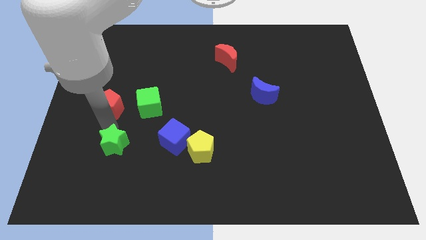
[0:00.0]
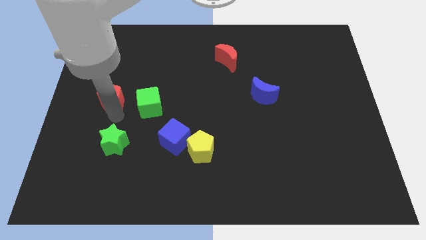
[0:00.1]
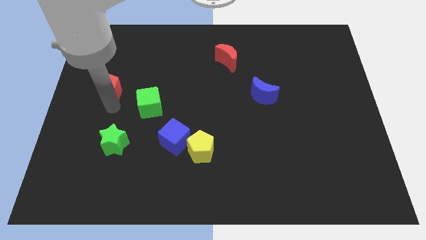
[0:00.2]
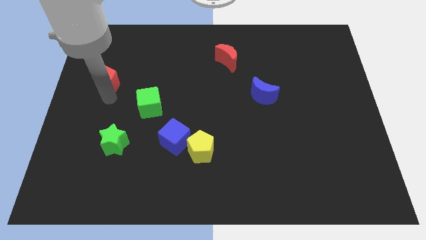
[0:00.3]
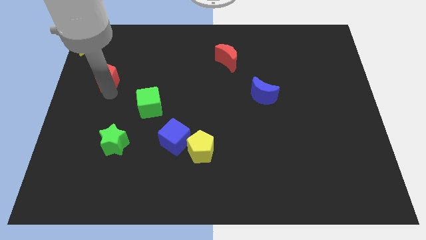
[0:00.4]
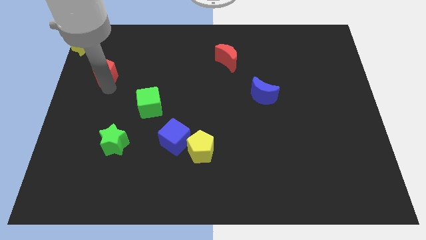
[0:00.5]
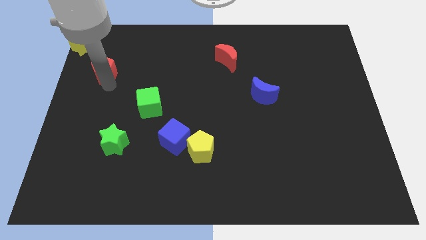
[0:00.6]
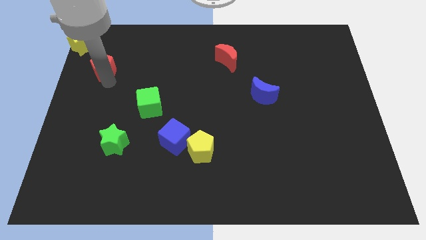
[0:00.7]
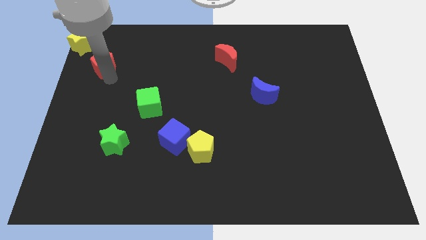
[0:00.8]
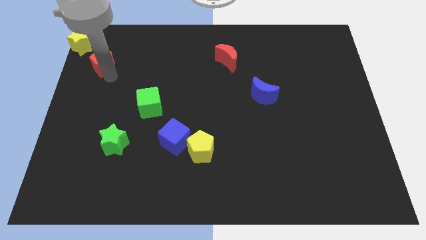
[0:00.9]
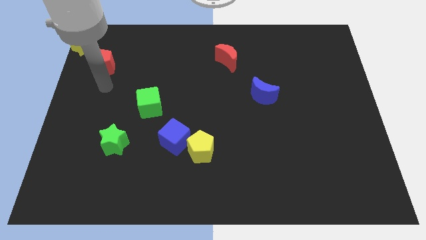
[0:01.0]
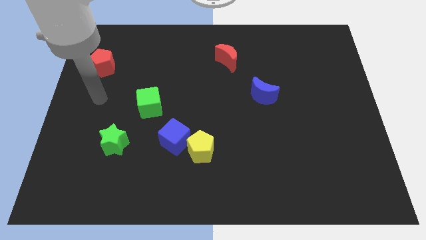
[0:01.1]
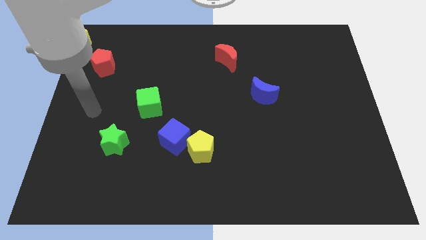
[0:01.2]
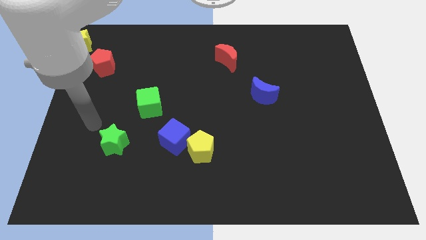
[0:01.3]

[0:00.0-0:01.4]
move the red pentagon to the bottom right side of the yellow star

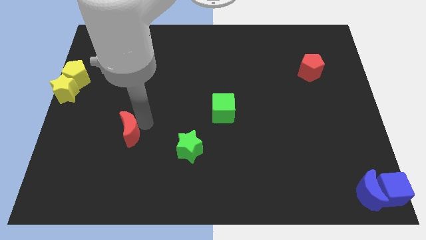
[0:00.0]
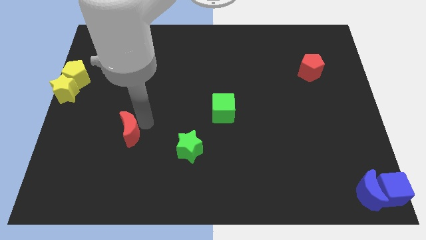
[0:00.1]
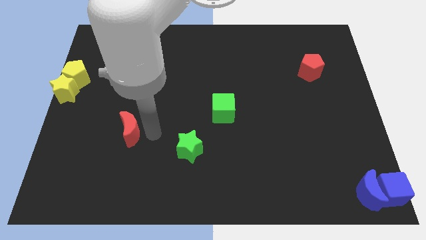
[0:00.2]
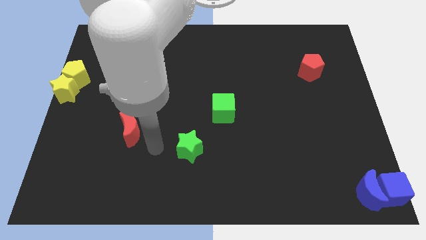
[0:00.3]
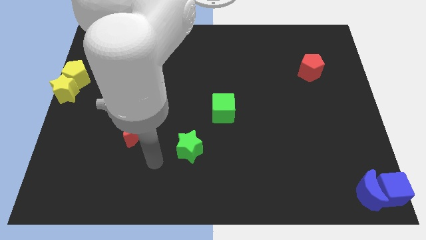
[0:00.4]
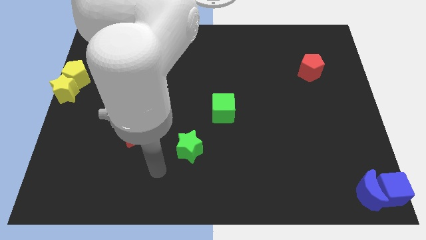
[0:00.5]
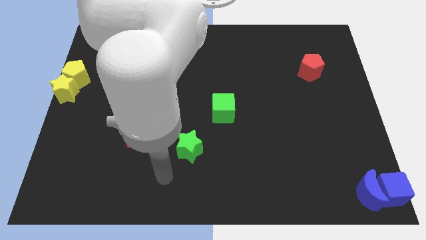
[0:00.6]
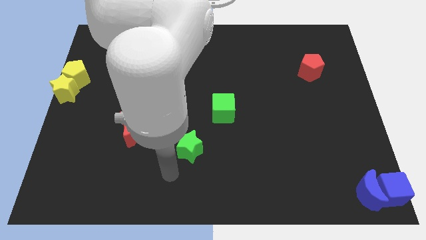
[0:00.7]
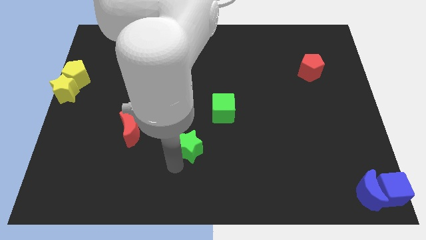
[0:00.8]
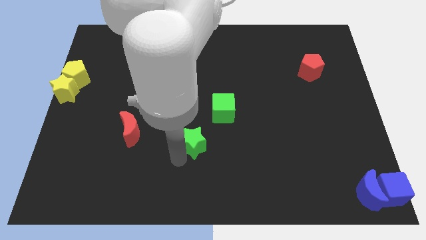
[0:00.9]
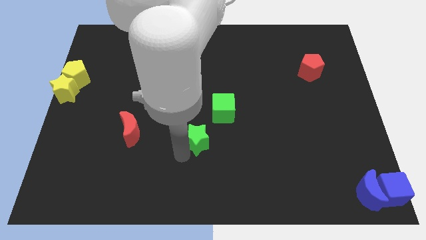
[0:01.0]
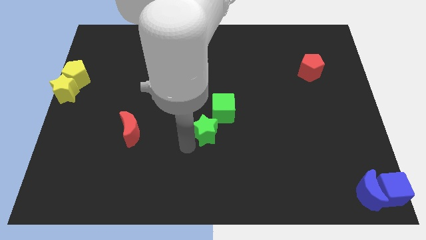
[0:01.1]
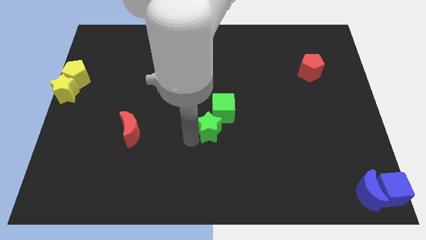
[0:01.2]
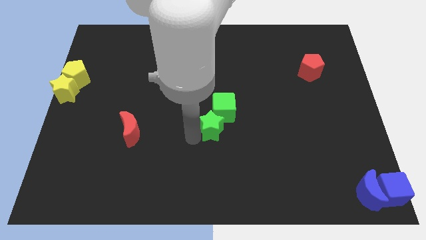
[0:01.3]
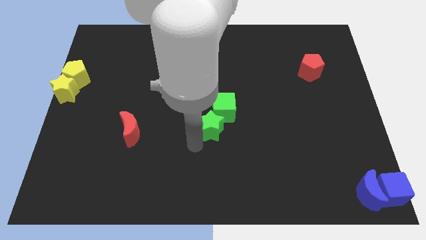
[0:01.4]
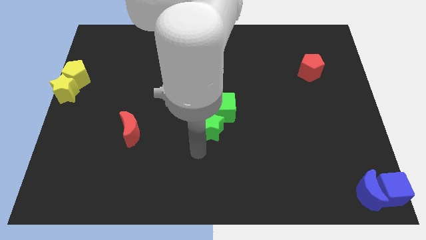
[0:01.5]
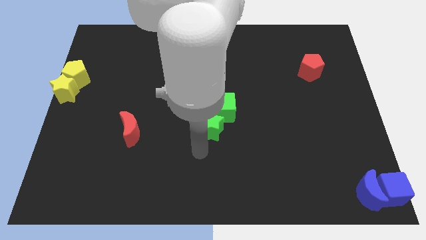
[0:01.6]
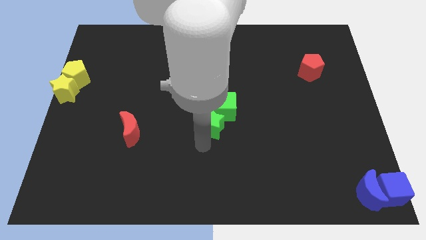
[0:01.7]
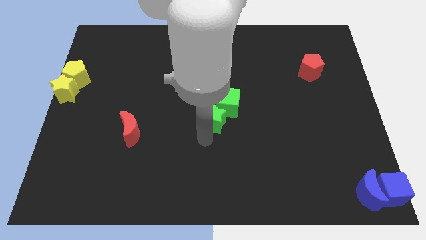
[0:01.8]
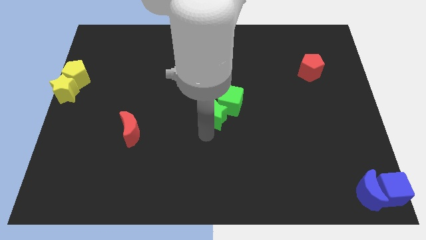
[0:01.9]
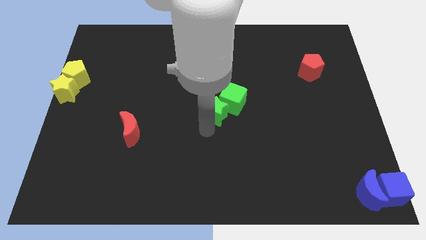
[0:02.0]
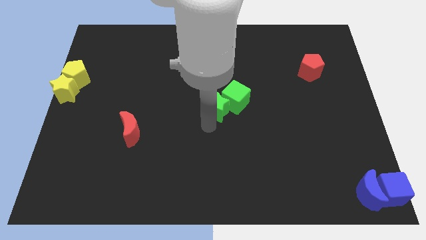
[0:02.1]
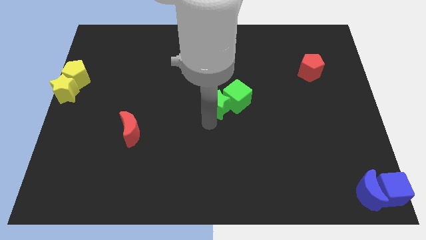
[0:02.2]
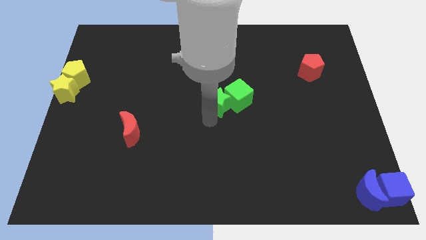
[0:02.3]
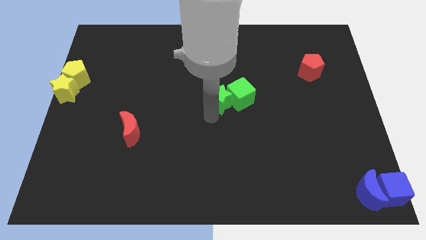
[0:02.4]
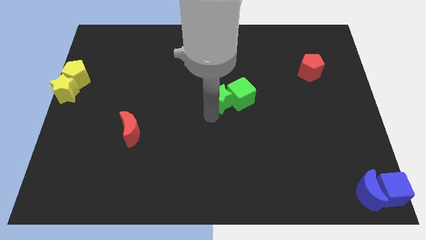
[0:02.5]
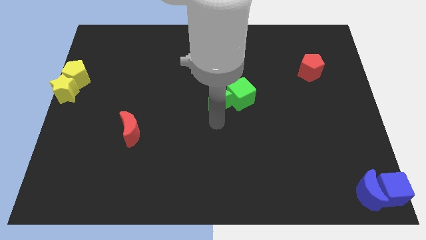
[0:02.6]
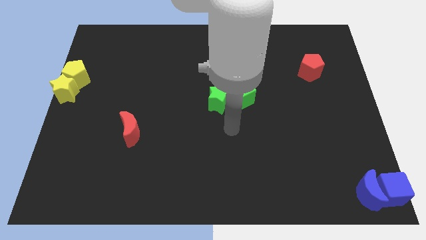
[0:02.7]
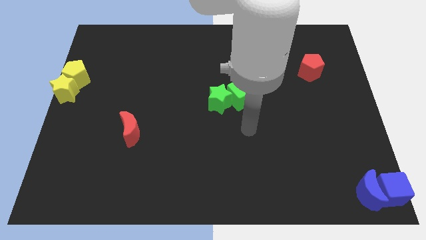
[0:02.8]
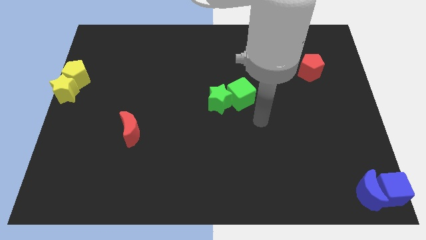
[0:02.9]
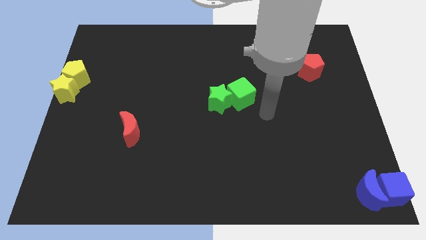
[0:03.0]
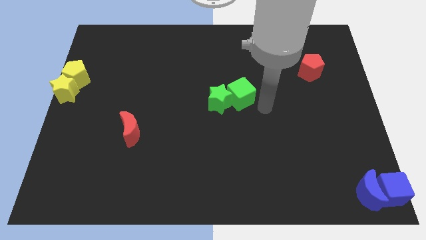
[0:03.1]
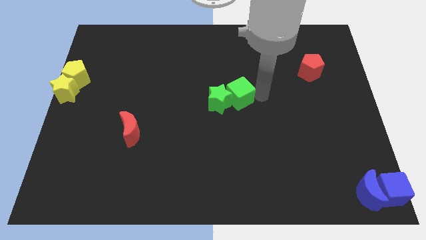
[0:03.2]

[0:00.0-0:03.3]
place the green blocks at the center of the table

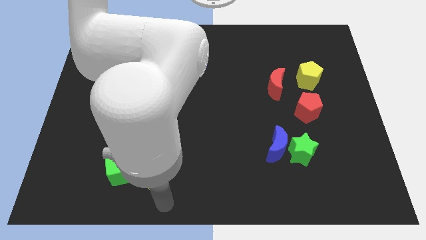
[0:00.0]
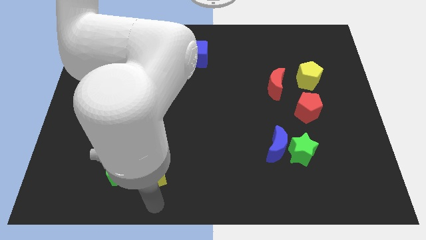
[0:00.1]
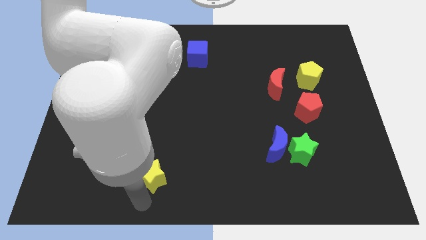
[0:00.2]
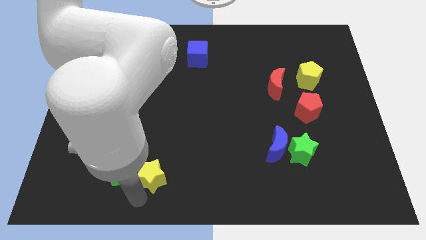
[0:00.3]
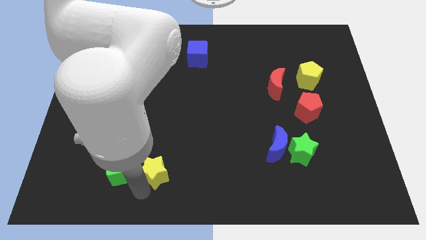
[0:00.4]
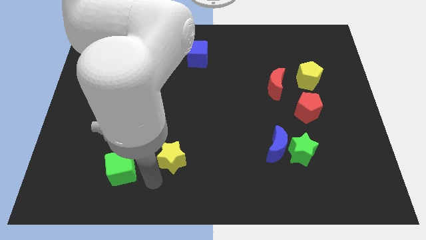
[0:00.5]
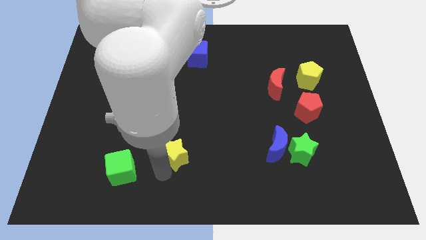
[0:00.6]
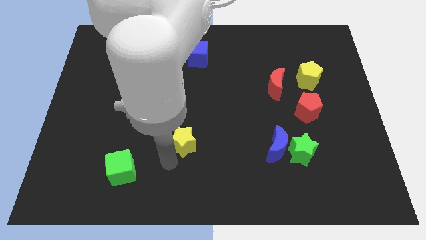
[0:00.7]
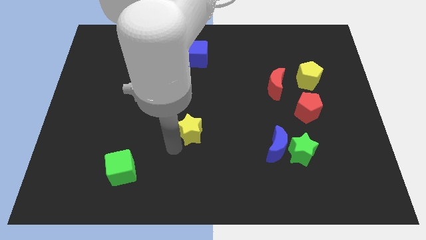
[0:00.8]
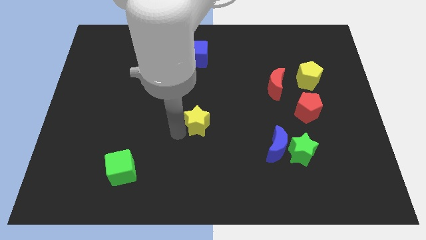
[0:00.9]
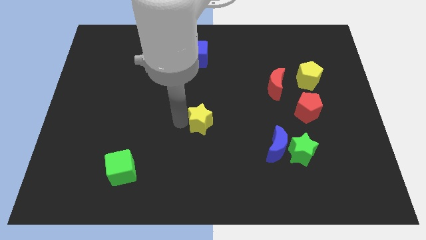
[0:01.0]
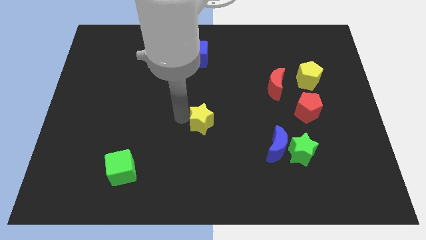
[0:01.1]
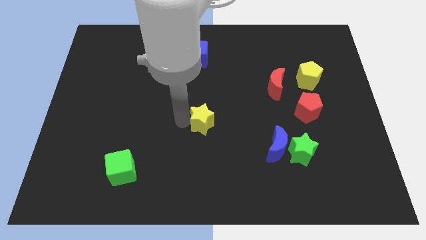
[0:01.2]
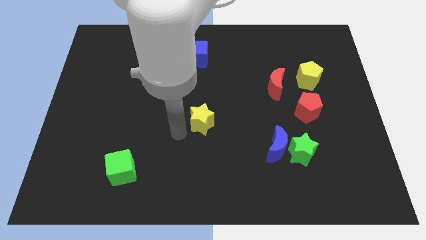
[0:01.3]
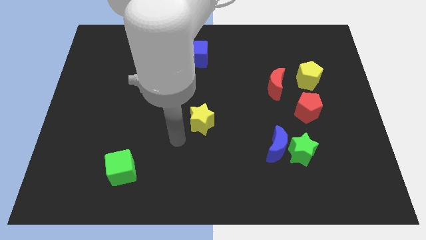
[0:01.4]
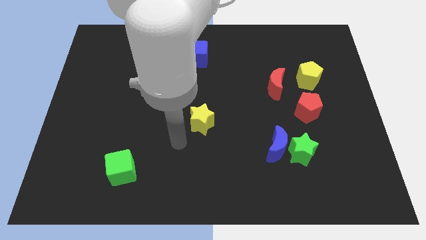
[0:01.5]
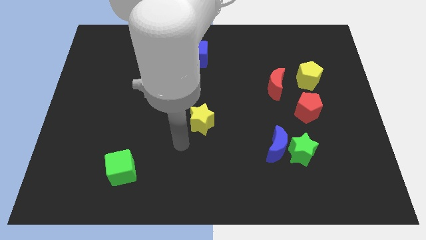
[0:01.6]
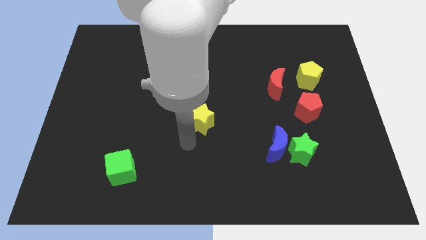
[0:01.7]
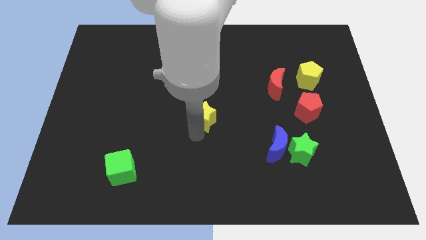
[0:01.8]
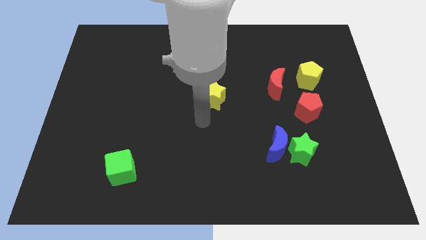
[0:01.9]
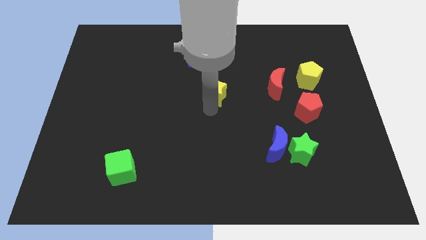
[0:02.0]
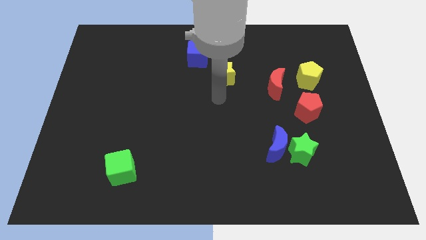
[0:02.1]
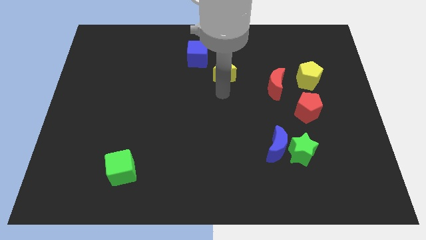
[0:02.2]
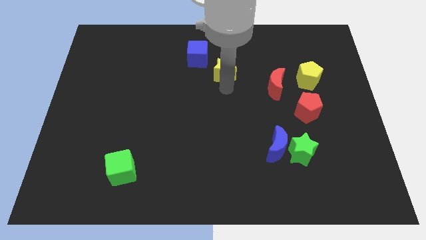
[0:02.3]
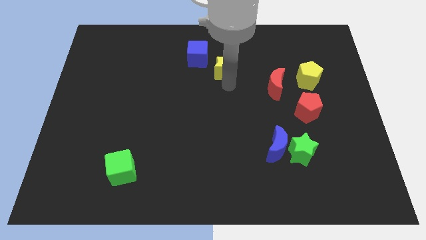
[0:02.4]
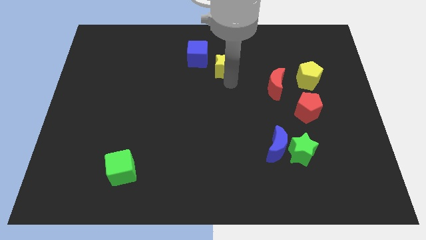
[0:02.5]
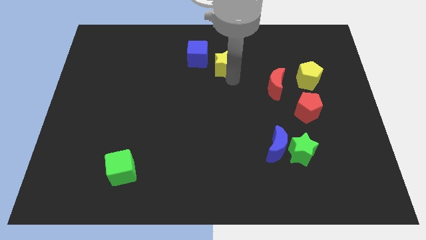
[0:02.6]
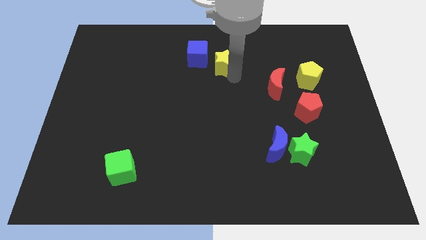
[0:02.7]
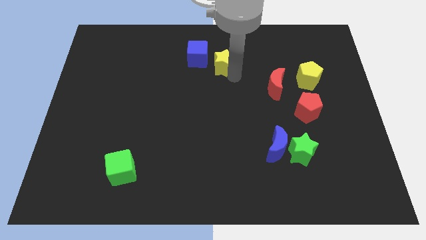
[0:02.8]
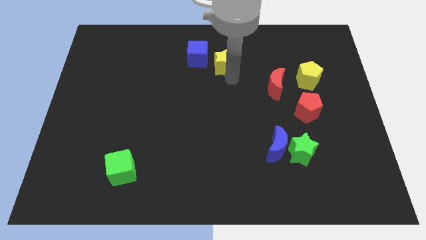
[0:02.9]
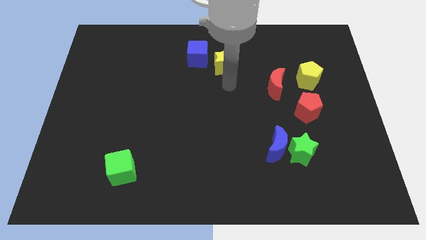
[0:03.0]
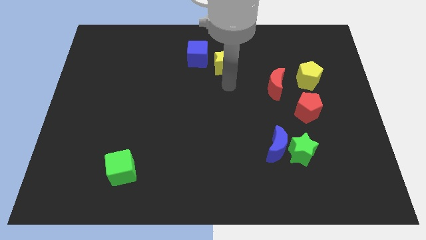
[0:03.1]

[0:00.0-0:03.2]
place the yellow star in between the blue cube and red moon

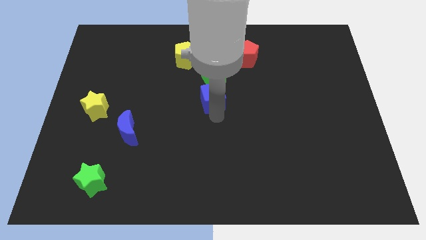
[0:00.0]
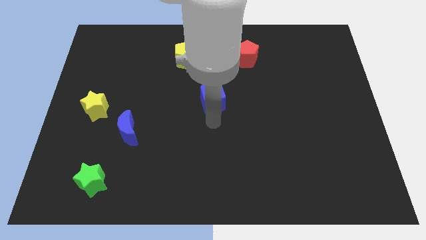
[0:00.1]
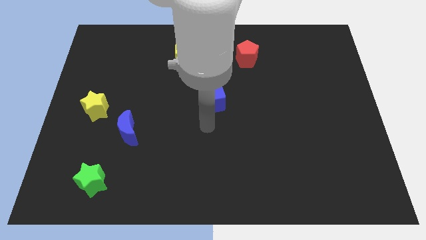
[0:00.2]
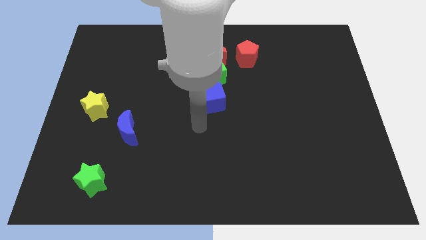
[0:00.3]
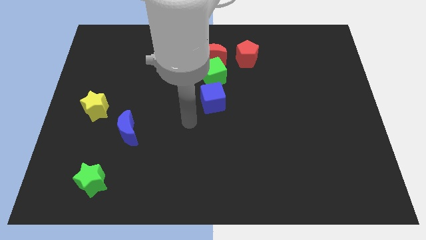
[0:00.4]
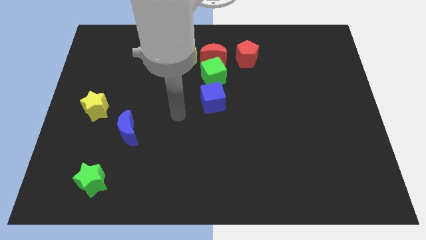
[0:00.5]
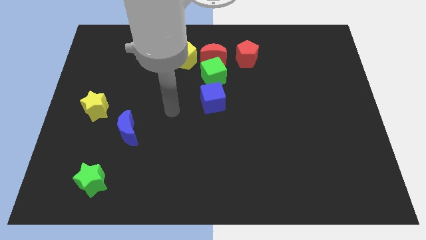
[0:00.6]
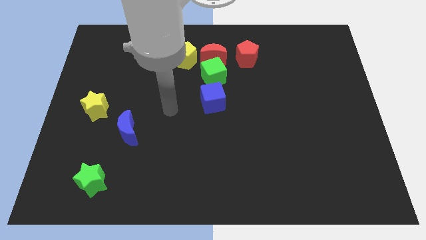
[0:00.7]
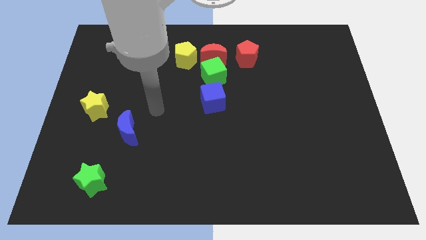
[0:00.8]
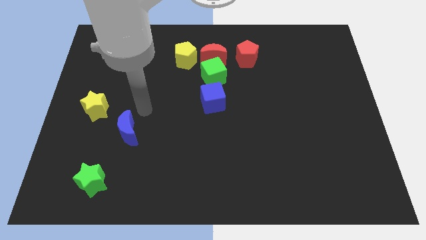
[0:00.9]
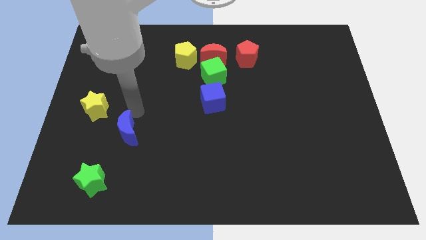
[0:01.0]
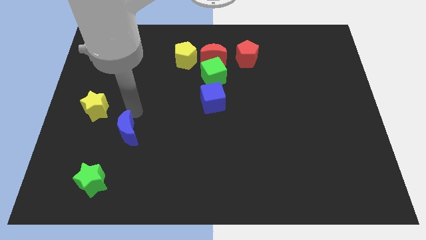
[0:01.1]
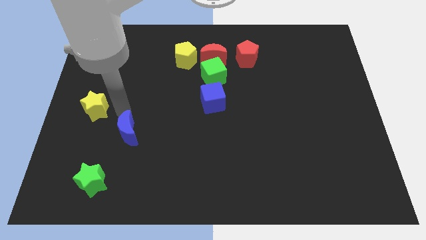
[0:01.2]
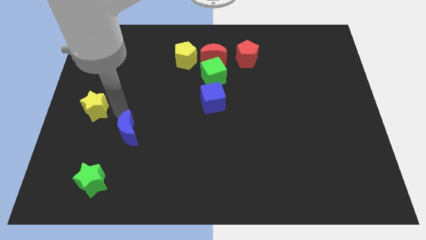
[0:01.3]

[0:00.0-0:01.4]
place the arm at the top of the blue moon
